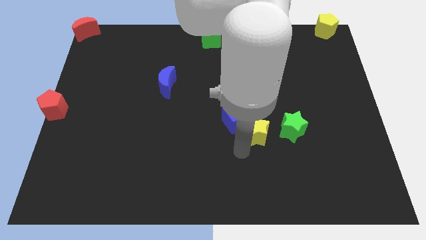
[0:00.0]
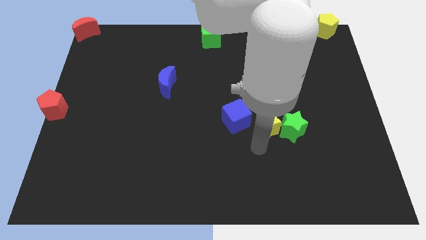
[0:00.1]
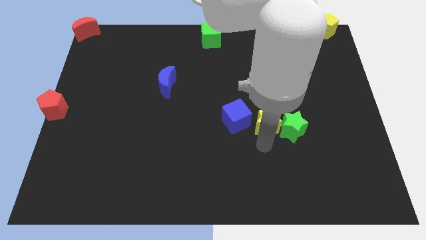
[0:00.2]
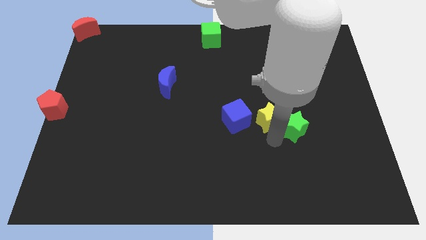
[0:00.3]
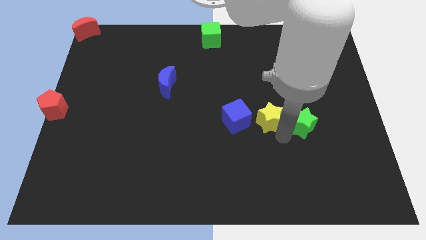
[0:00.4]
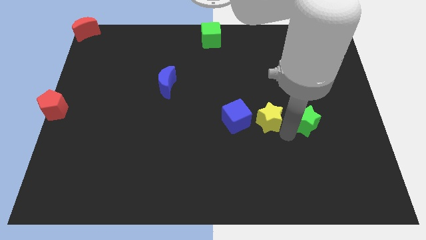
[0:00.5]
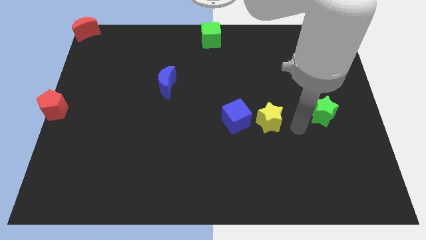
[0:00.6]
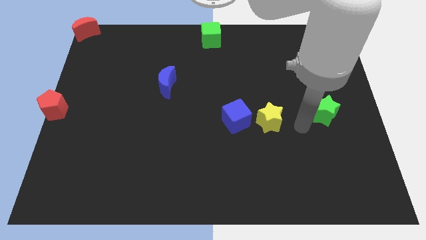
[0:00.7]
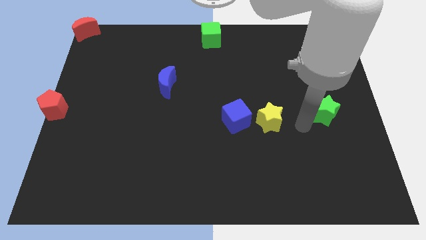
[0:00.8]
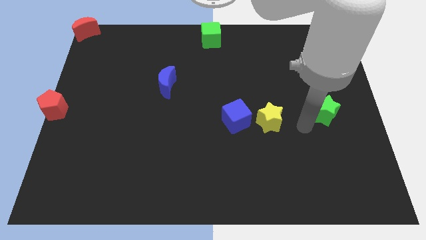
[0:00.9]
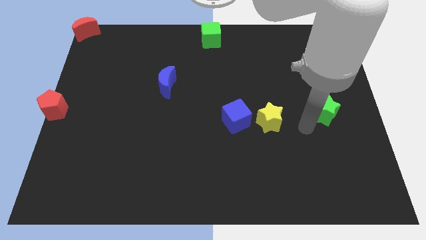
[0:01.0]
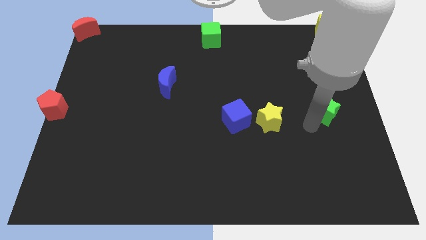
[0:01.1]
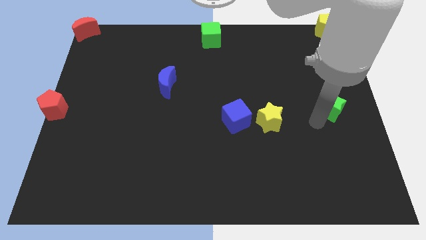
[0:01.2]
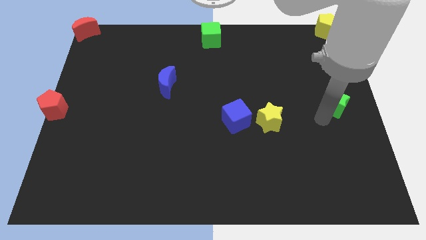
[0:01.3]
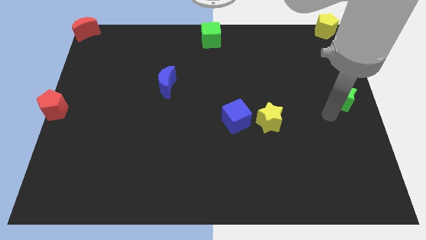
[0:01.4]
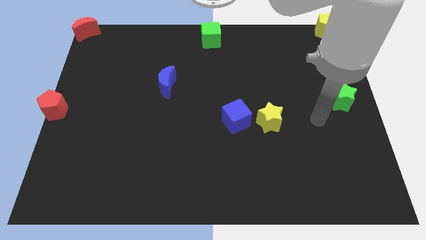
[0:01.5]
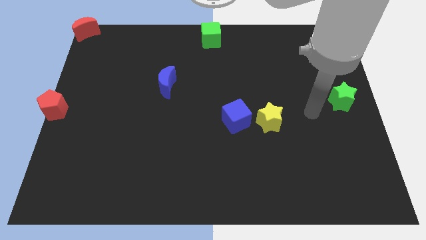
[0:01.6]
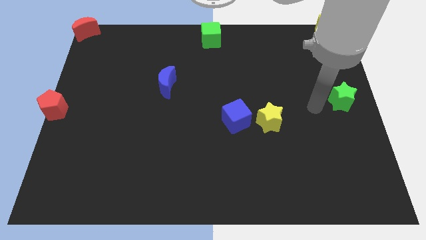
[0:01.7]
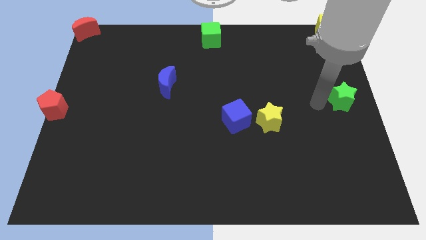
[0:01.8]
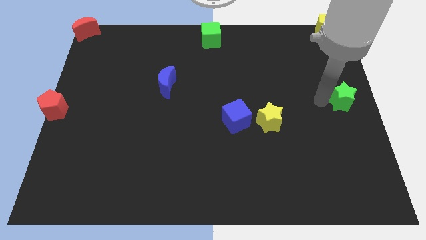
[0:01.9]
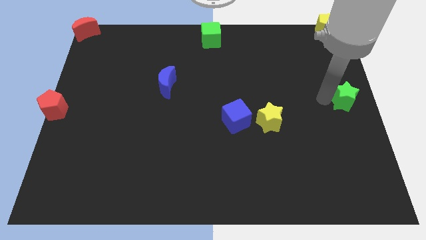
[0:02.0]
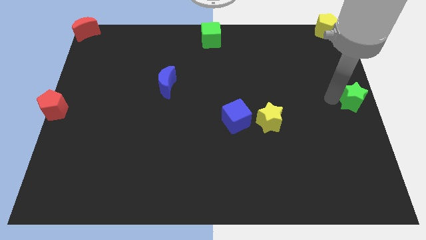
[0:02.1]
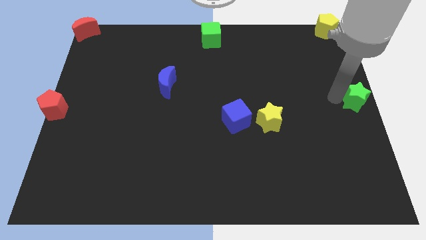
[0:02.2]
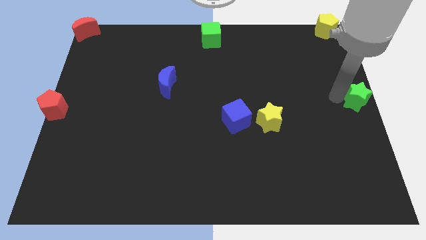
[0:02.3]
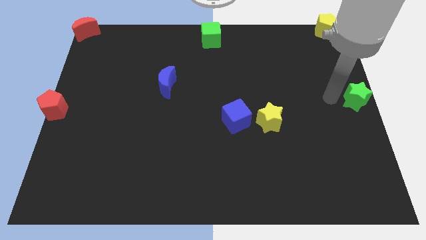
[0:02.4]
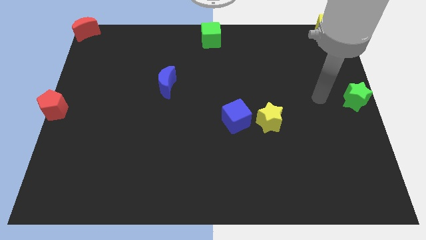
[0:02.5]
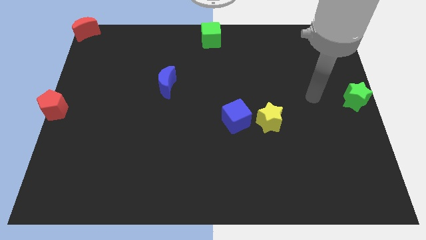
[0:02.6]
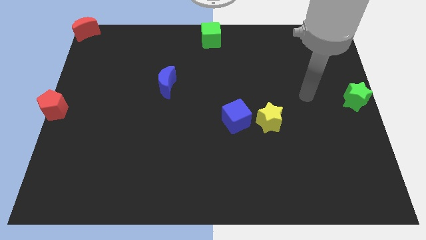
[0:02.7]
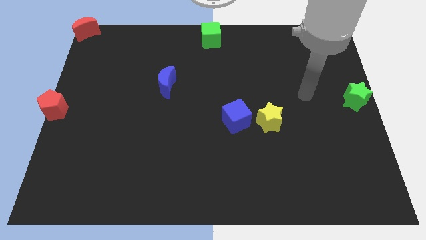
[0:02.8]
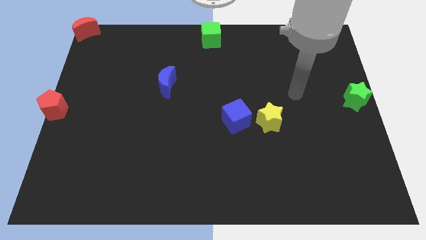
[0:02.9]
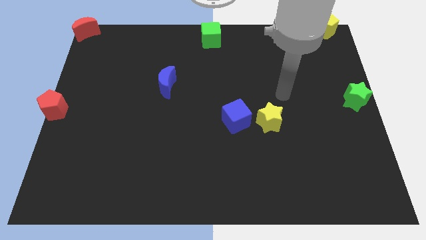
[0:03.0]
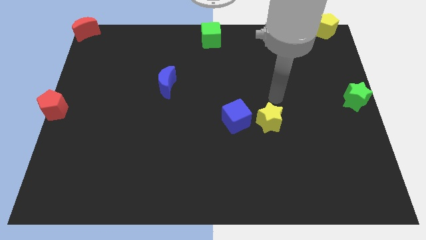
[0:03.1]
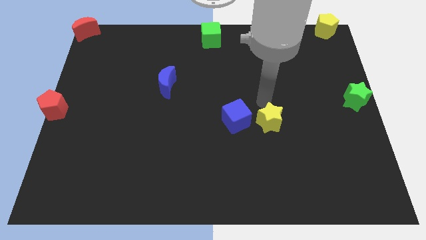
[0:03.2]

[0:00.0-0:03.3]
push the green star to the centre right of the board

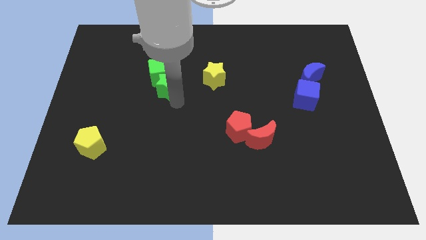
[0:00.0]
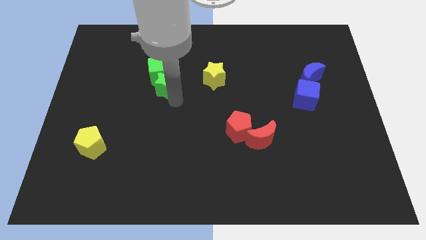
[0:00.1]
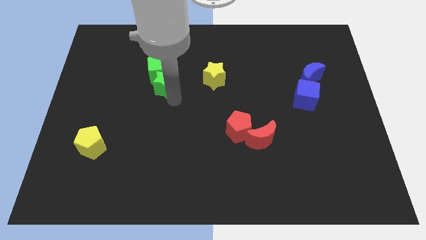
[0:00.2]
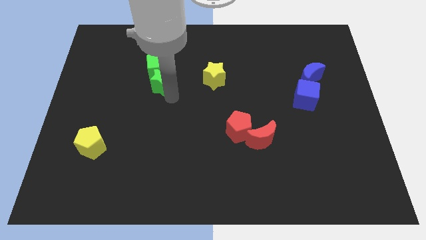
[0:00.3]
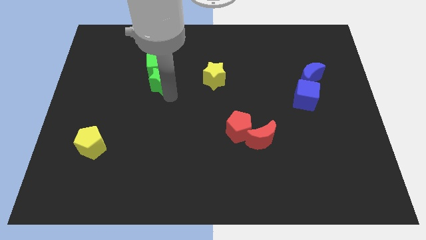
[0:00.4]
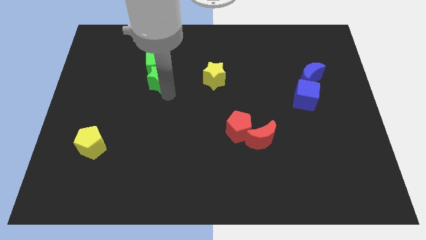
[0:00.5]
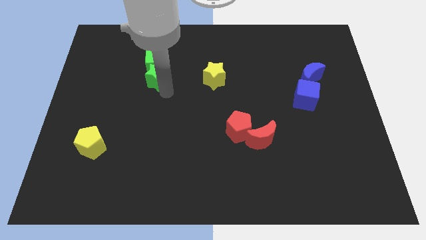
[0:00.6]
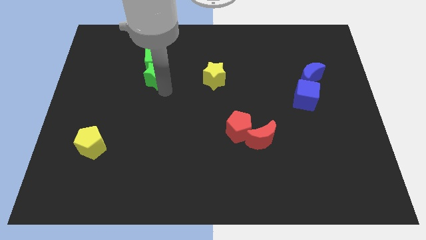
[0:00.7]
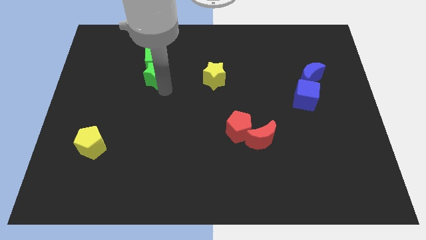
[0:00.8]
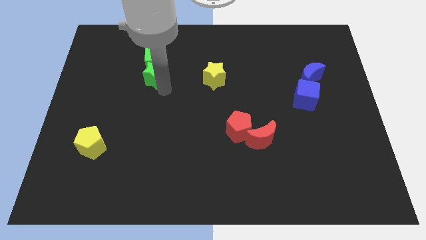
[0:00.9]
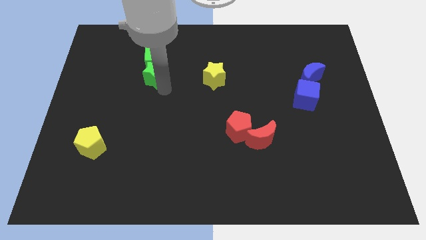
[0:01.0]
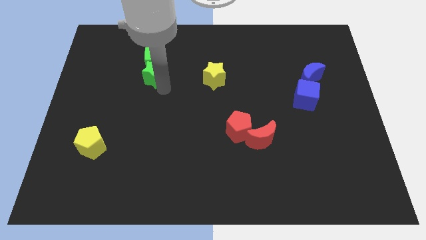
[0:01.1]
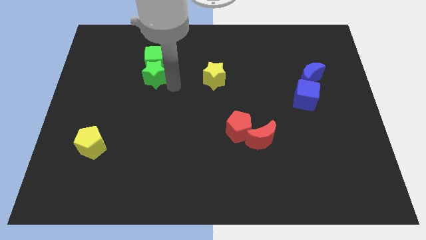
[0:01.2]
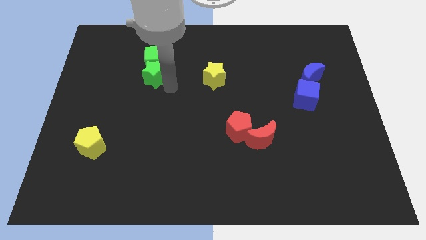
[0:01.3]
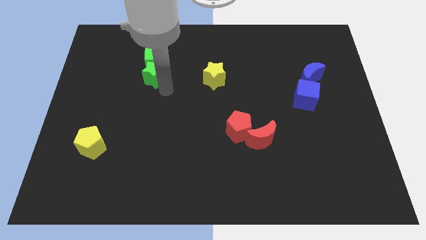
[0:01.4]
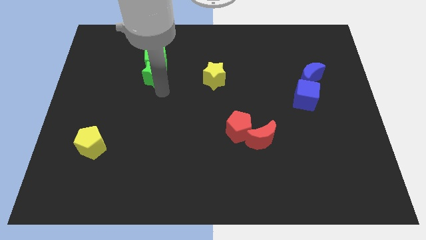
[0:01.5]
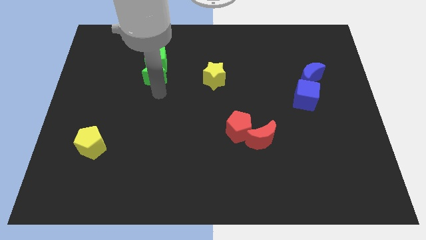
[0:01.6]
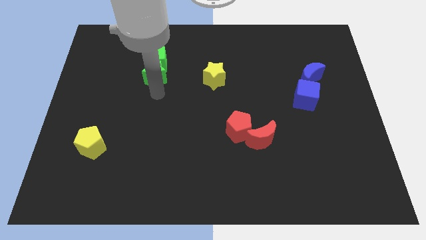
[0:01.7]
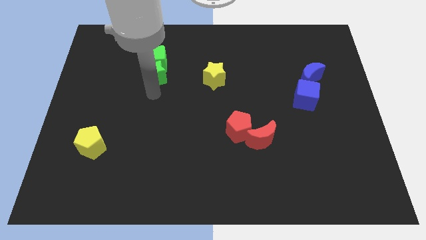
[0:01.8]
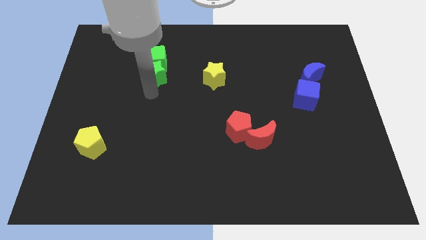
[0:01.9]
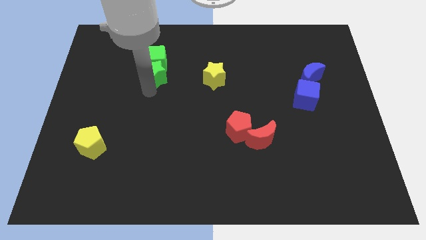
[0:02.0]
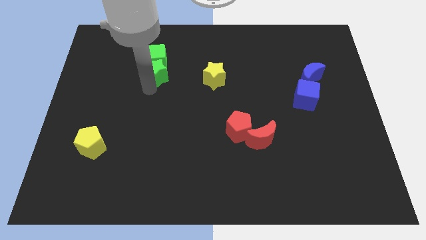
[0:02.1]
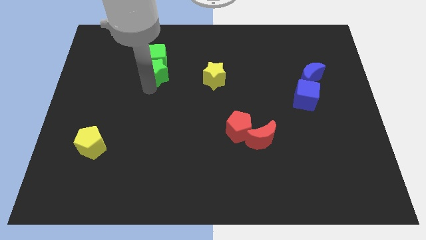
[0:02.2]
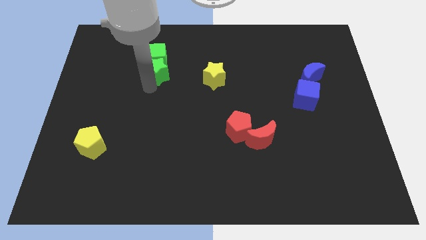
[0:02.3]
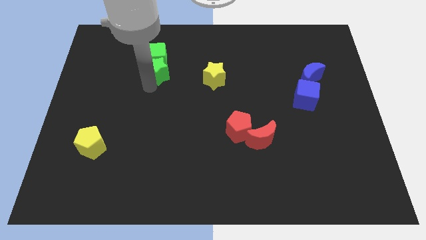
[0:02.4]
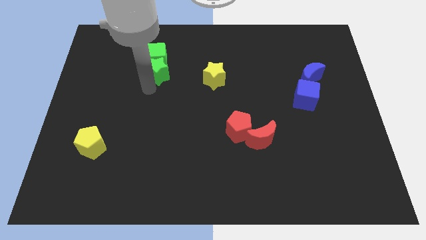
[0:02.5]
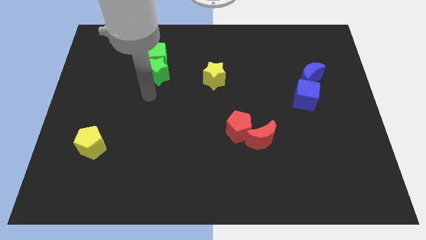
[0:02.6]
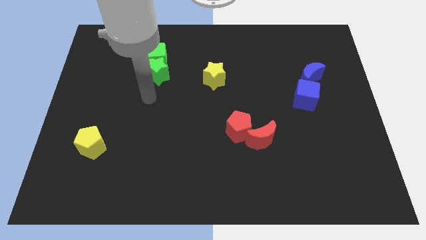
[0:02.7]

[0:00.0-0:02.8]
slide the group of green blocks towards the top left side of the board

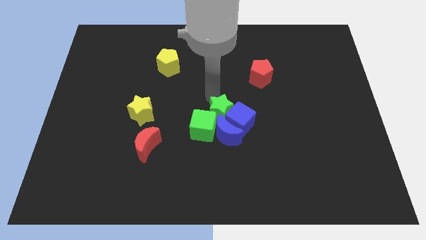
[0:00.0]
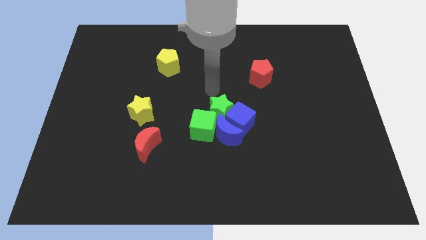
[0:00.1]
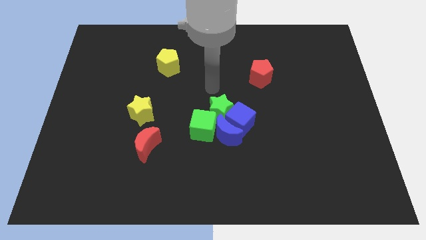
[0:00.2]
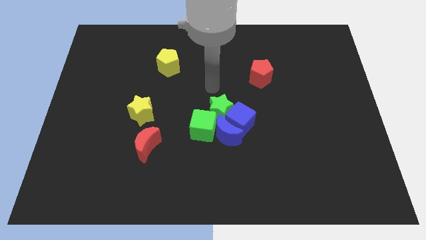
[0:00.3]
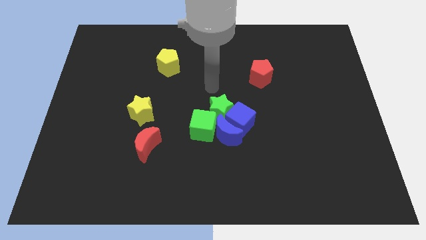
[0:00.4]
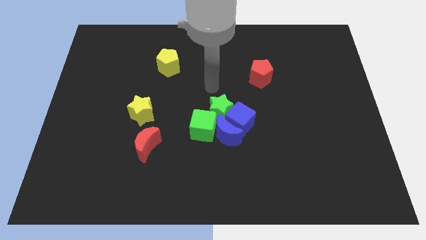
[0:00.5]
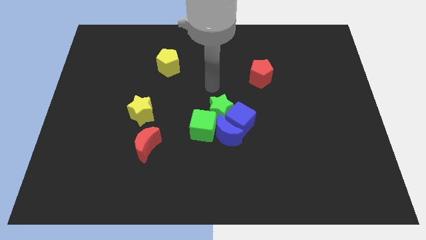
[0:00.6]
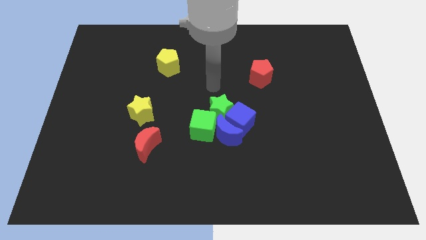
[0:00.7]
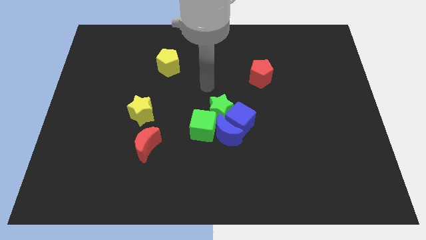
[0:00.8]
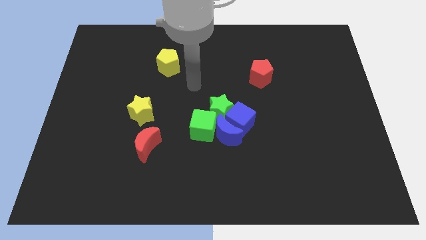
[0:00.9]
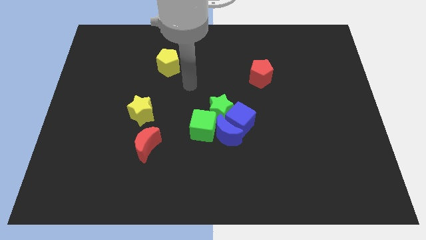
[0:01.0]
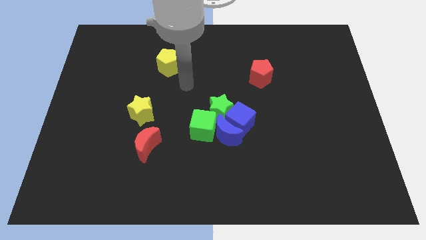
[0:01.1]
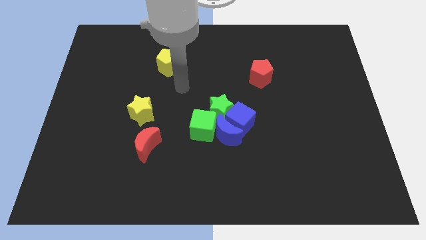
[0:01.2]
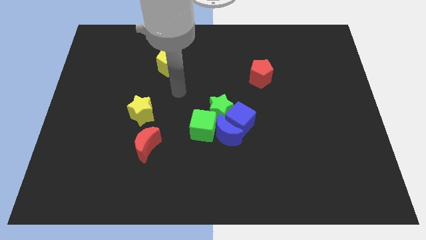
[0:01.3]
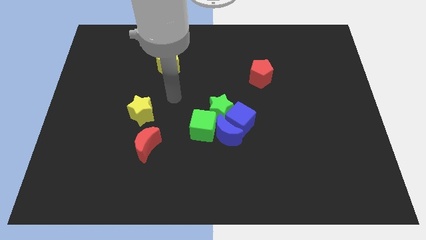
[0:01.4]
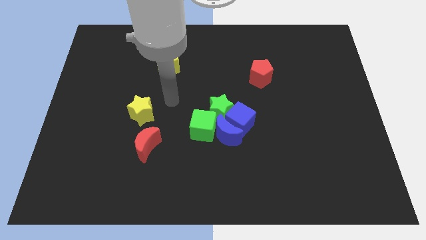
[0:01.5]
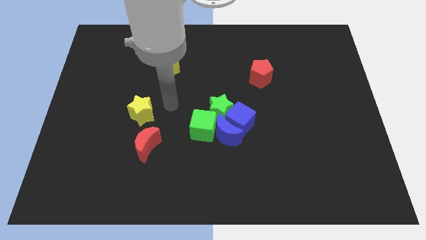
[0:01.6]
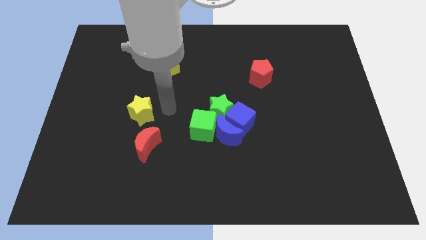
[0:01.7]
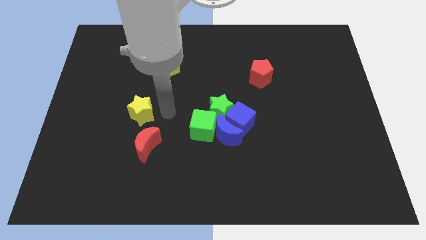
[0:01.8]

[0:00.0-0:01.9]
move your arm to the right of the yellow star

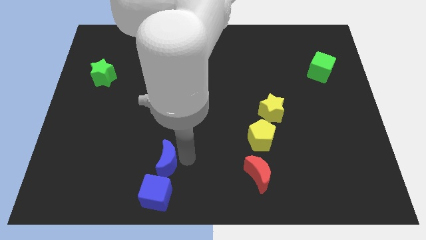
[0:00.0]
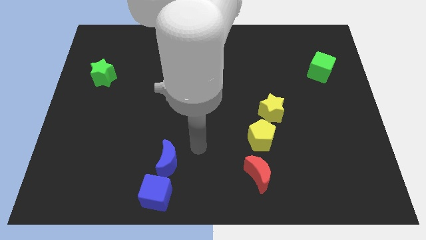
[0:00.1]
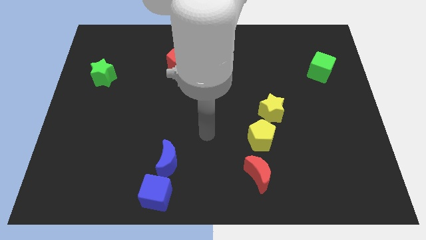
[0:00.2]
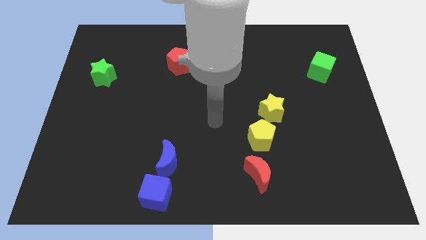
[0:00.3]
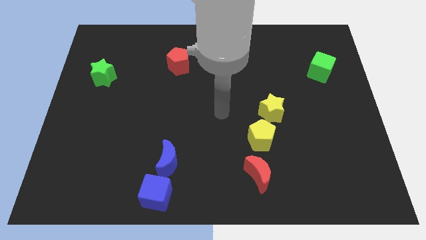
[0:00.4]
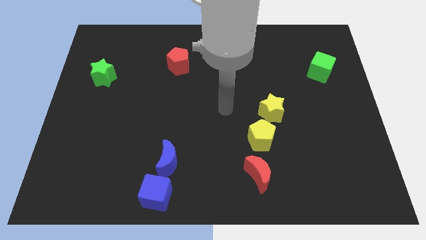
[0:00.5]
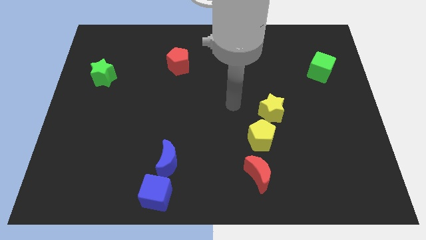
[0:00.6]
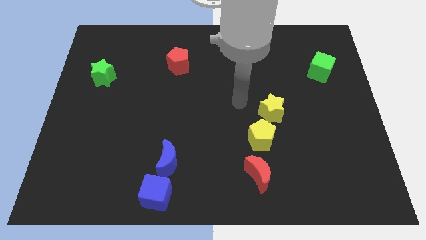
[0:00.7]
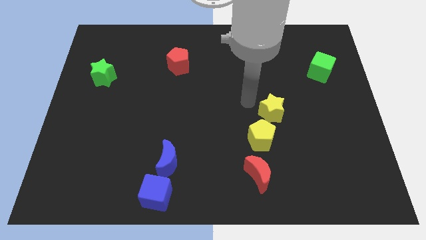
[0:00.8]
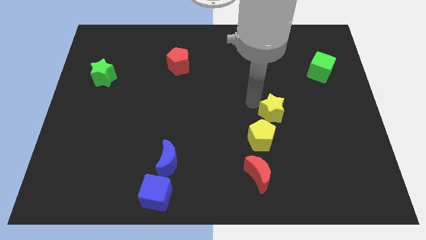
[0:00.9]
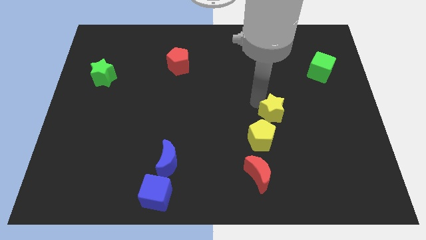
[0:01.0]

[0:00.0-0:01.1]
move your hand towards the yellow star
